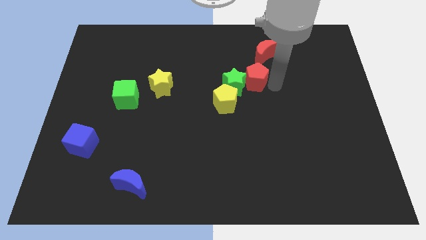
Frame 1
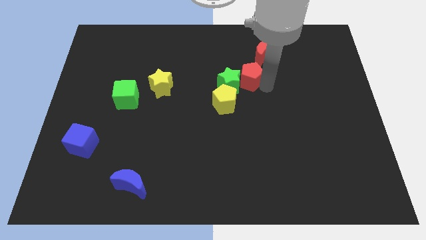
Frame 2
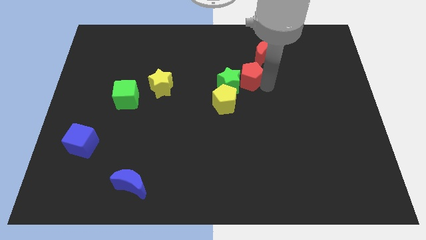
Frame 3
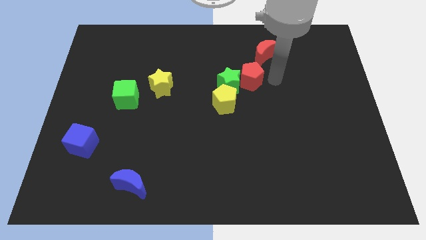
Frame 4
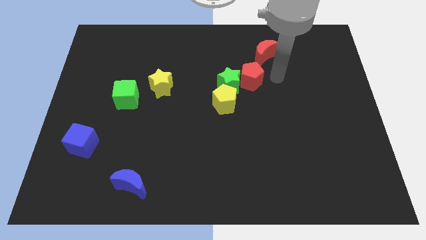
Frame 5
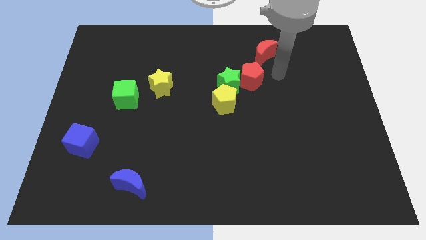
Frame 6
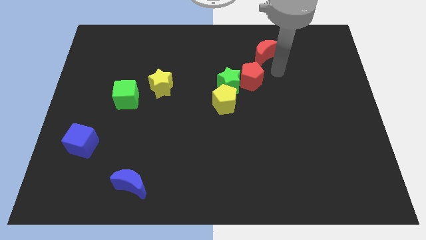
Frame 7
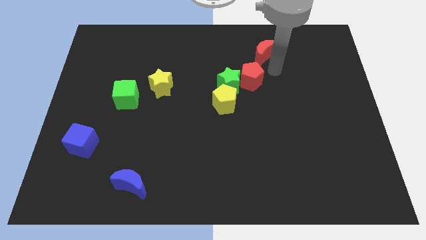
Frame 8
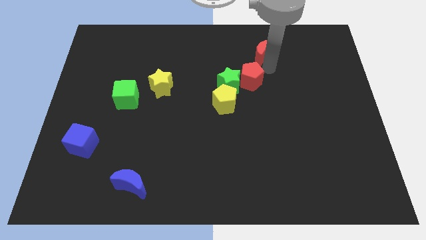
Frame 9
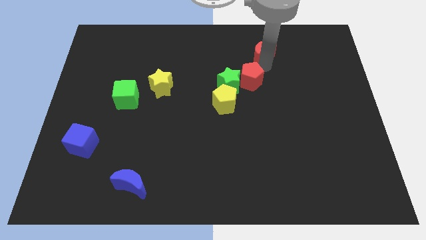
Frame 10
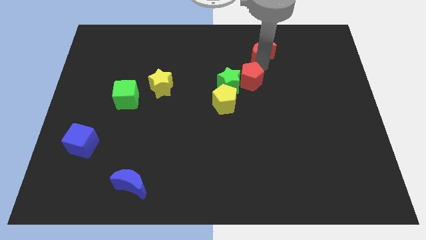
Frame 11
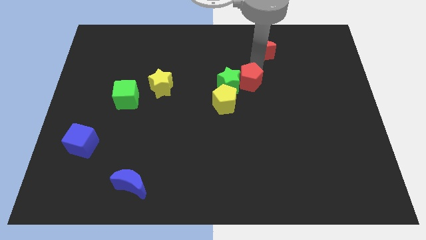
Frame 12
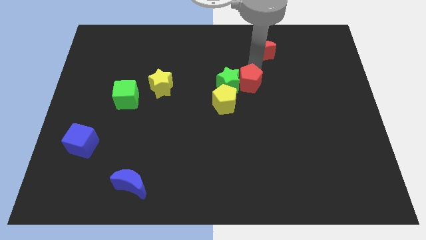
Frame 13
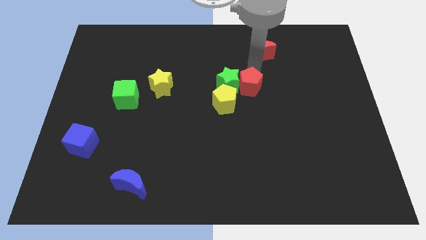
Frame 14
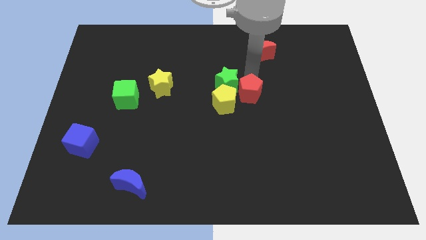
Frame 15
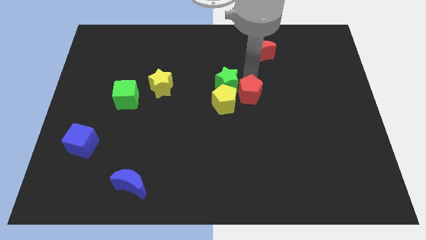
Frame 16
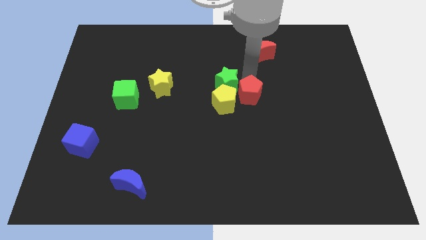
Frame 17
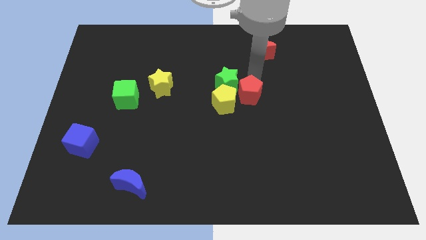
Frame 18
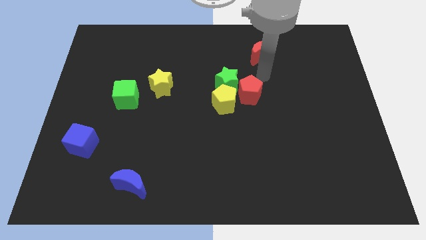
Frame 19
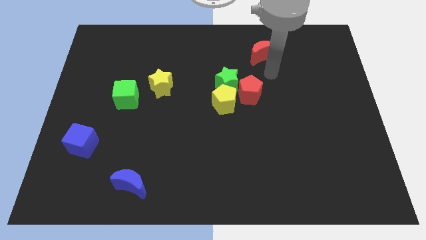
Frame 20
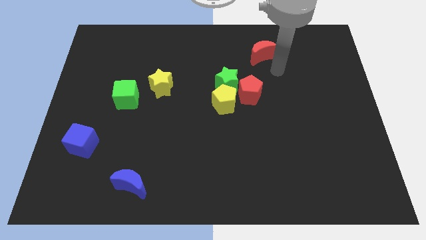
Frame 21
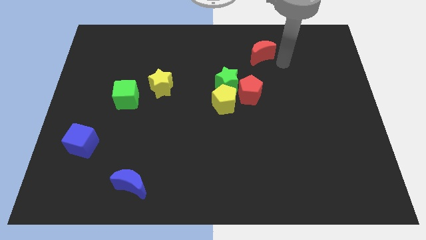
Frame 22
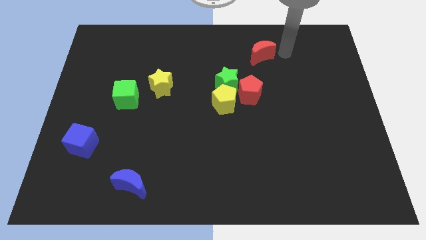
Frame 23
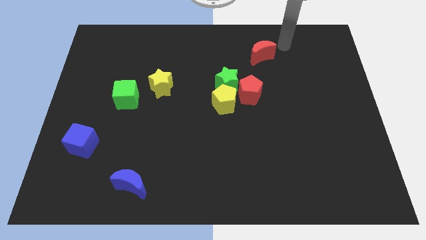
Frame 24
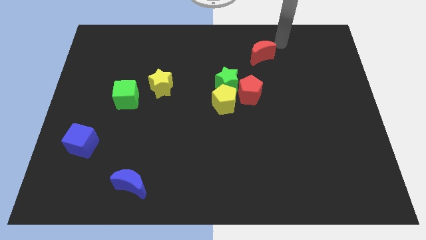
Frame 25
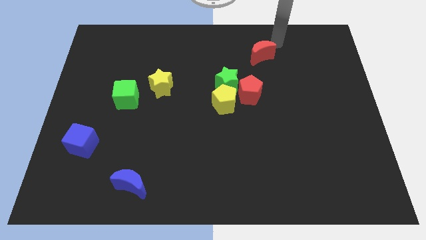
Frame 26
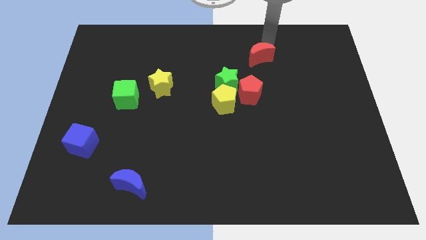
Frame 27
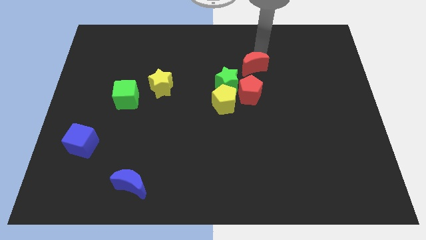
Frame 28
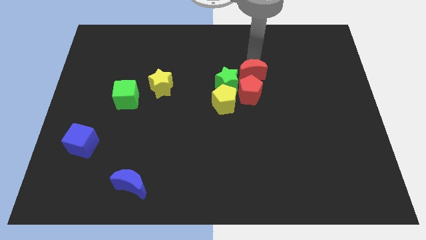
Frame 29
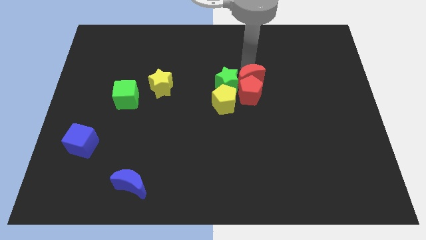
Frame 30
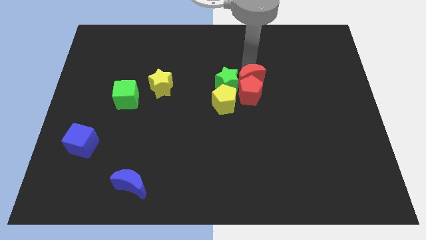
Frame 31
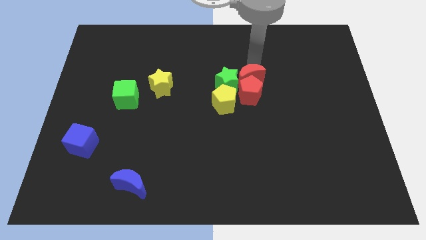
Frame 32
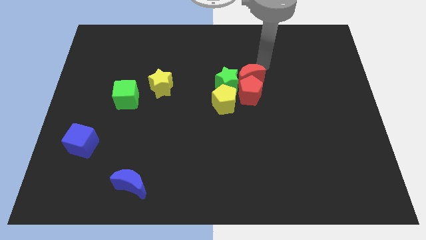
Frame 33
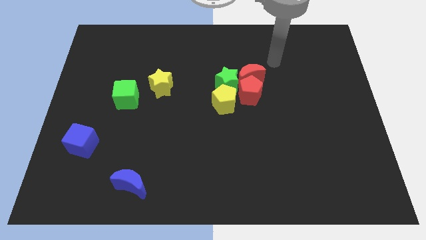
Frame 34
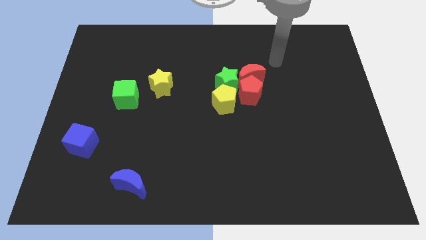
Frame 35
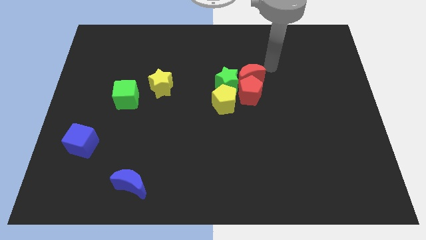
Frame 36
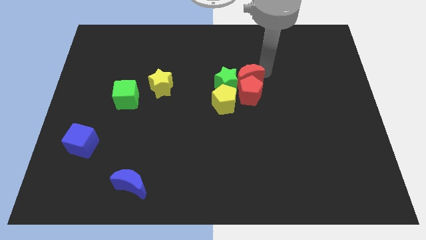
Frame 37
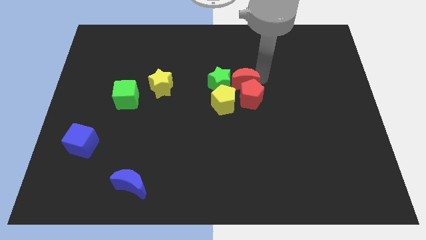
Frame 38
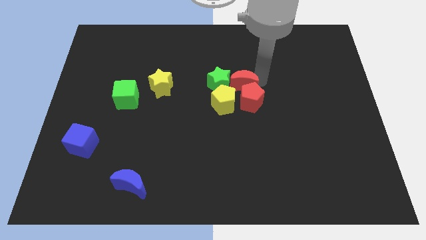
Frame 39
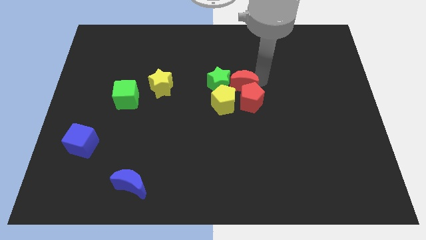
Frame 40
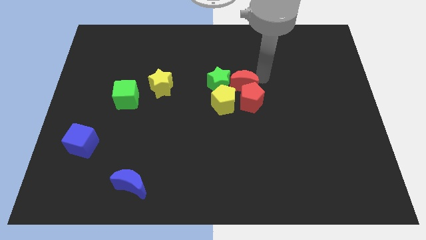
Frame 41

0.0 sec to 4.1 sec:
push the red blocks close to the right of the green star and yellow pentagon

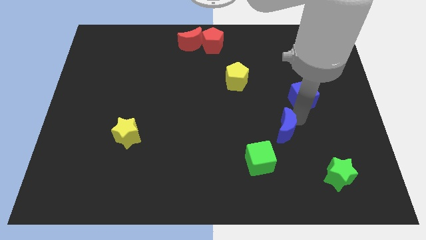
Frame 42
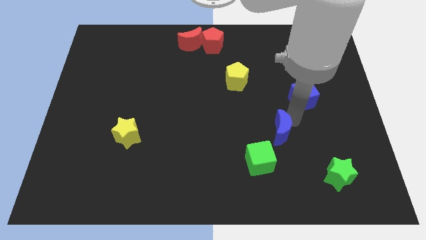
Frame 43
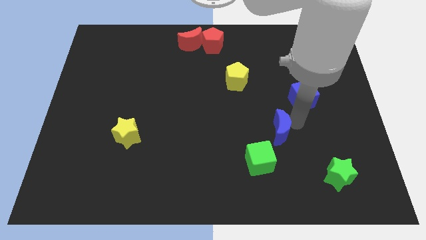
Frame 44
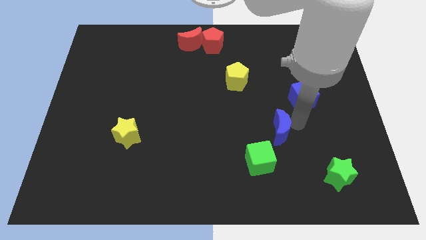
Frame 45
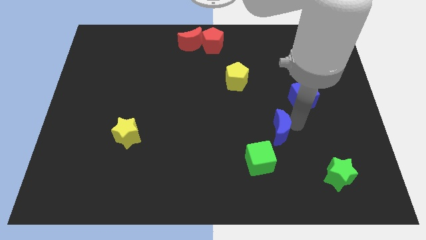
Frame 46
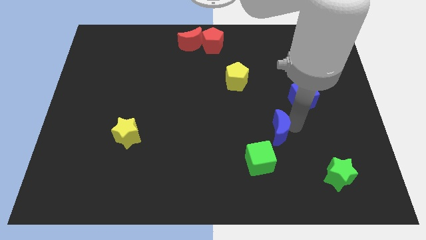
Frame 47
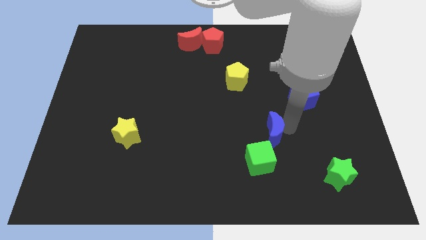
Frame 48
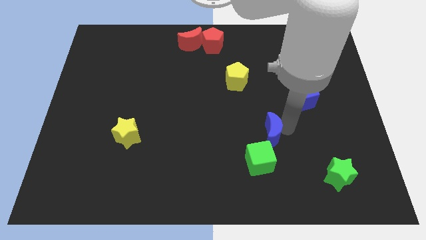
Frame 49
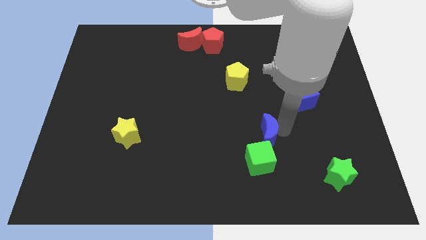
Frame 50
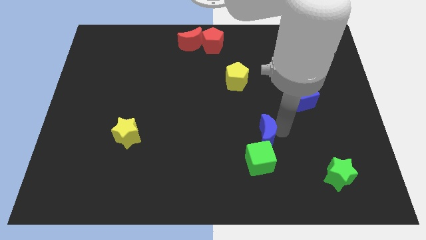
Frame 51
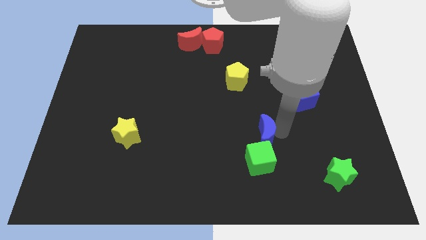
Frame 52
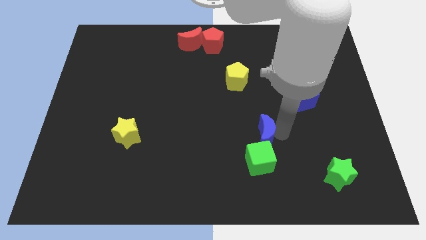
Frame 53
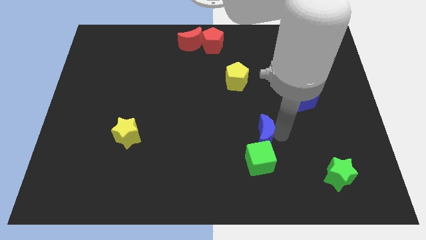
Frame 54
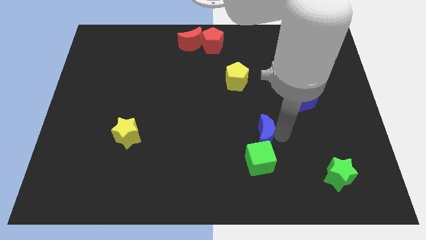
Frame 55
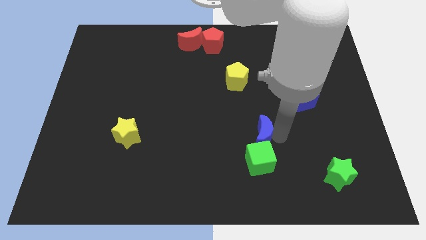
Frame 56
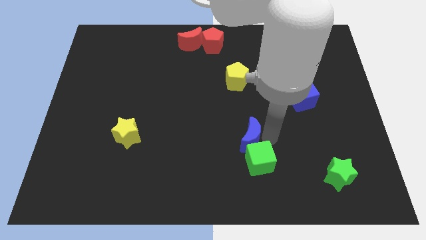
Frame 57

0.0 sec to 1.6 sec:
place blue moon to the top of green cube

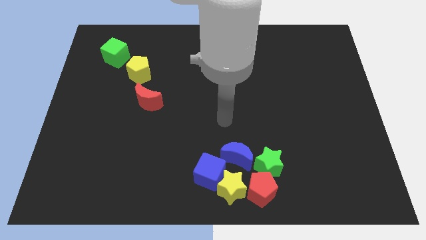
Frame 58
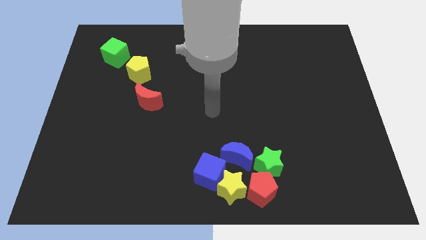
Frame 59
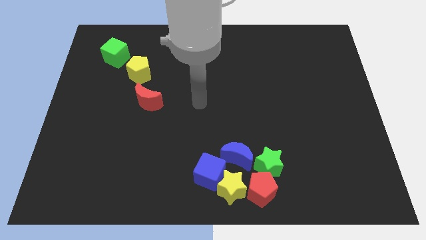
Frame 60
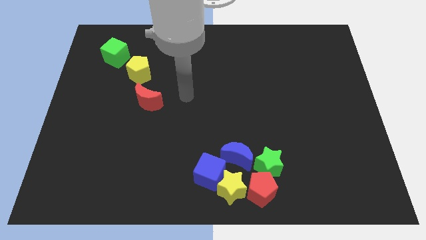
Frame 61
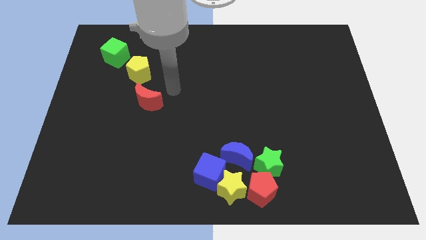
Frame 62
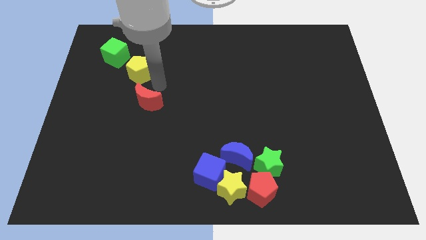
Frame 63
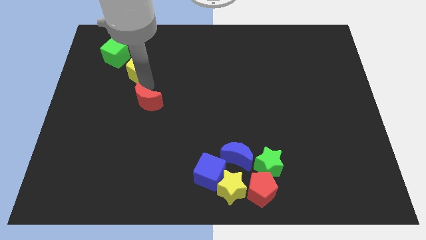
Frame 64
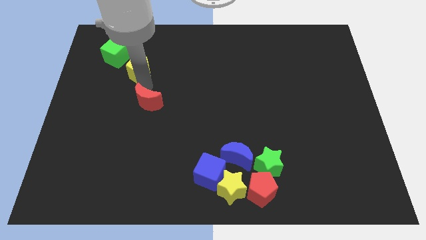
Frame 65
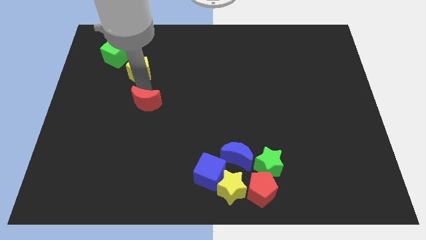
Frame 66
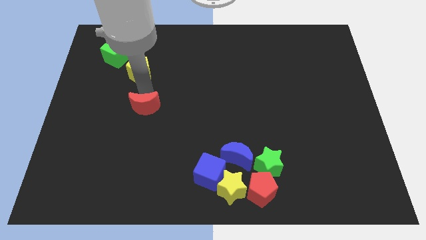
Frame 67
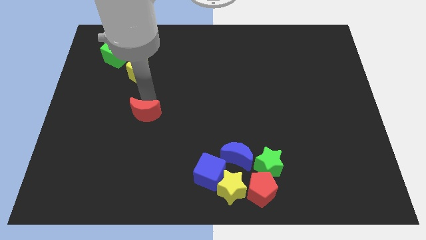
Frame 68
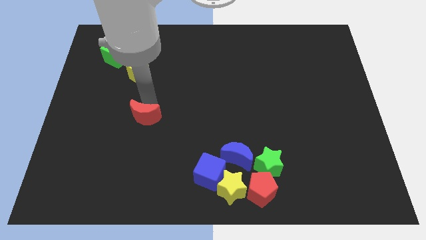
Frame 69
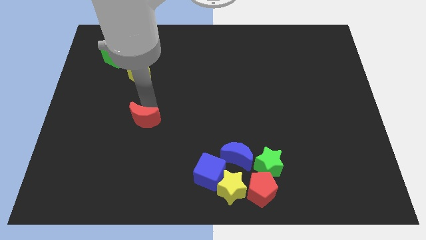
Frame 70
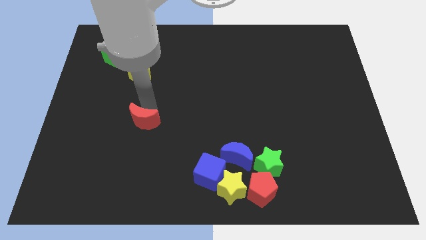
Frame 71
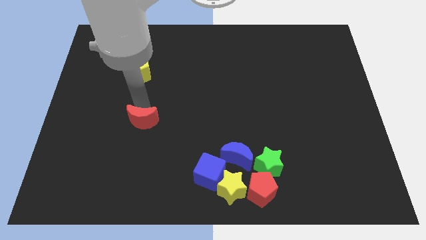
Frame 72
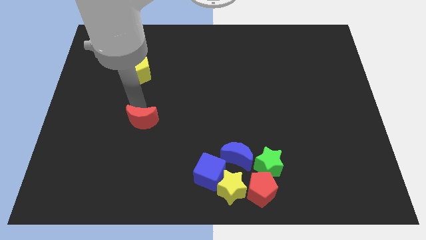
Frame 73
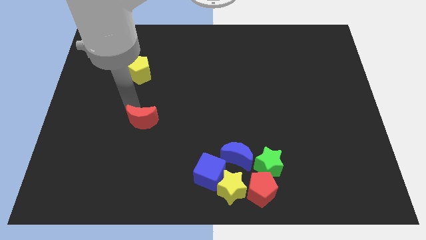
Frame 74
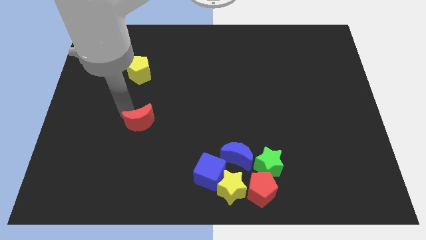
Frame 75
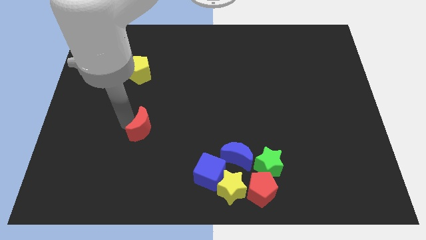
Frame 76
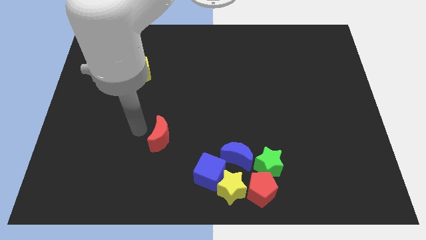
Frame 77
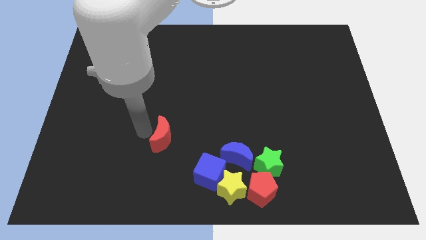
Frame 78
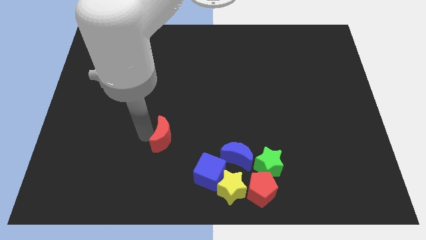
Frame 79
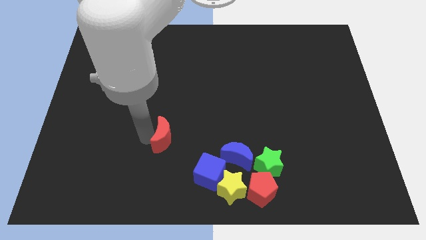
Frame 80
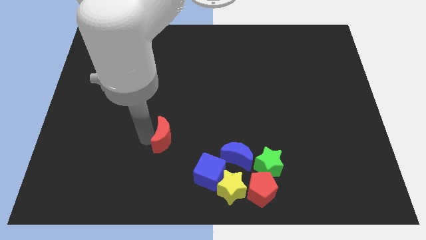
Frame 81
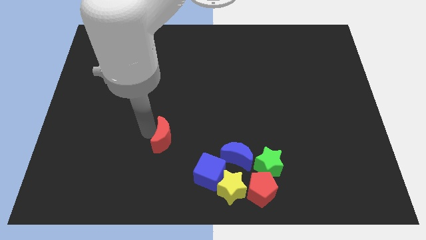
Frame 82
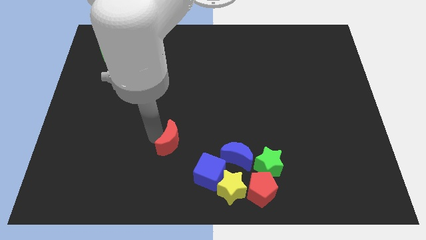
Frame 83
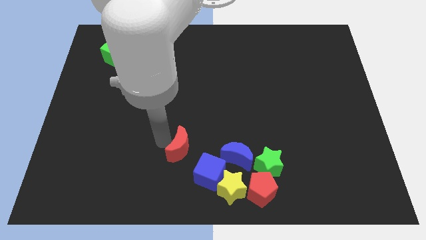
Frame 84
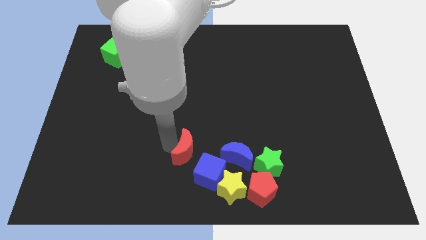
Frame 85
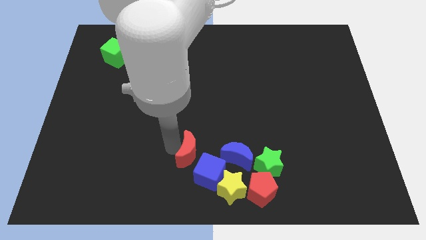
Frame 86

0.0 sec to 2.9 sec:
place the red crescent to the left of the blue crescent

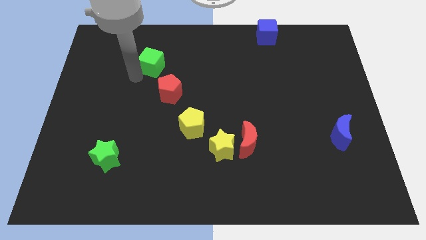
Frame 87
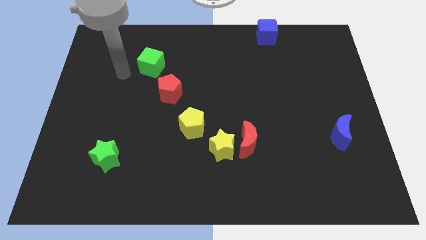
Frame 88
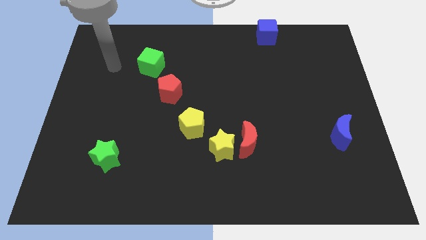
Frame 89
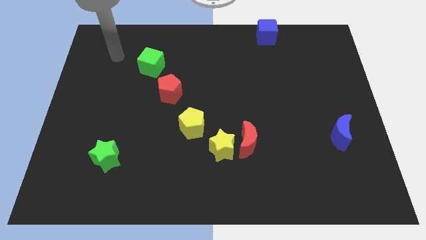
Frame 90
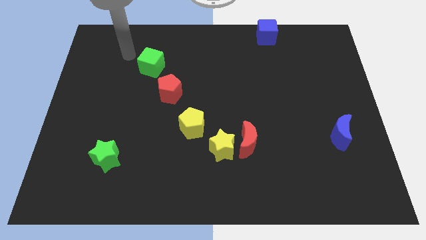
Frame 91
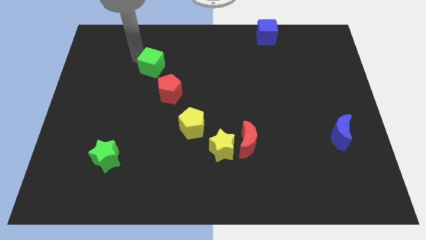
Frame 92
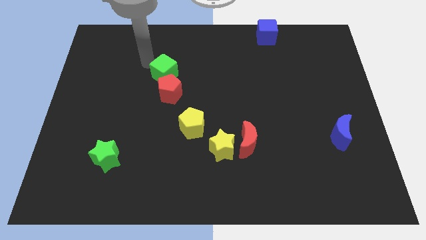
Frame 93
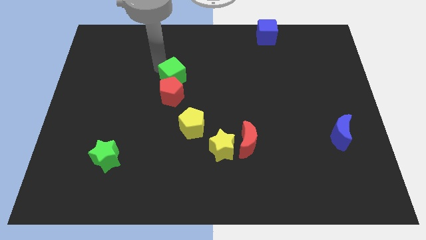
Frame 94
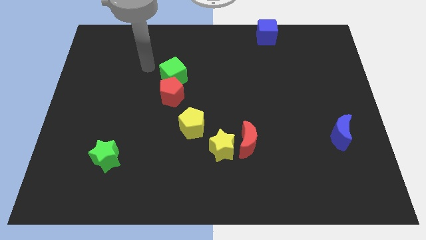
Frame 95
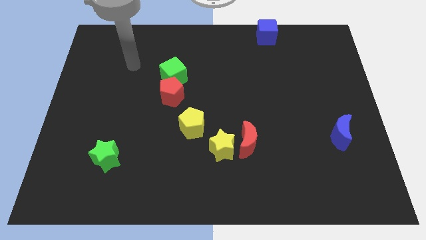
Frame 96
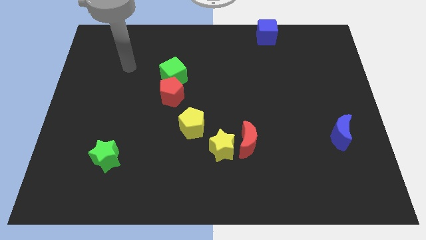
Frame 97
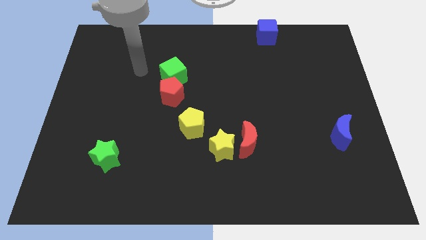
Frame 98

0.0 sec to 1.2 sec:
push the green cube into the red pentagon
